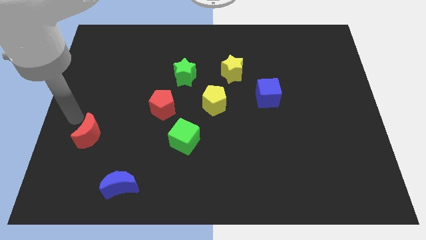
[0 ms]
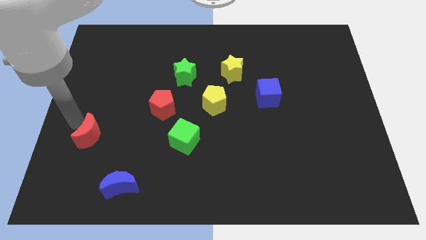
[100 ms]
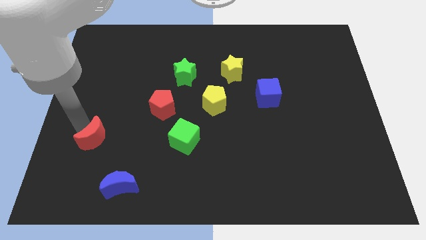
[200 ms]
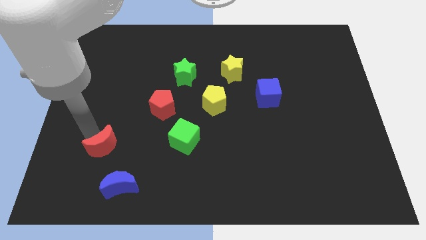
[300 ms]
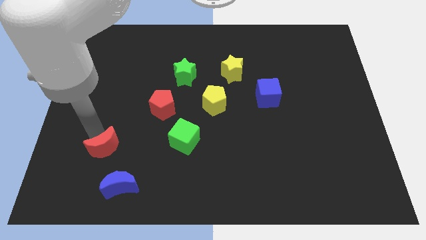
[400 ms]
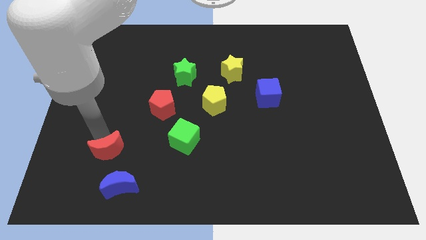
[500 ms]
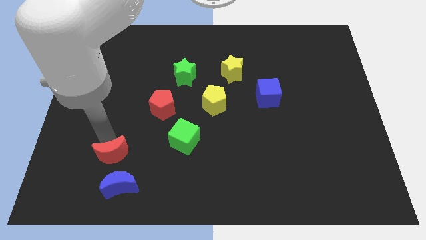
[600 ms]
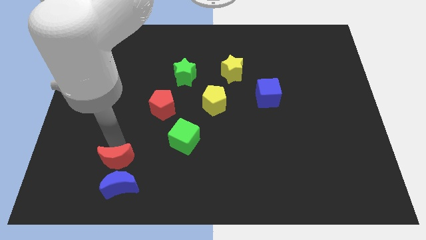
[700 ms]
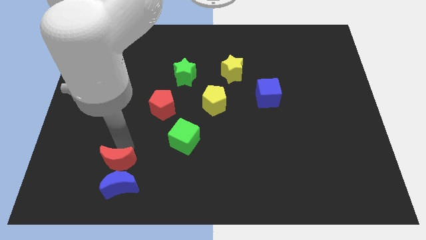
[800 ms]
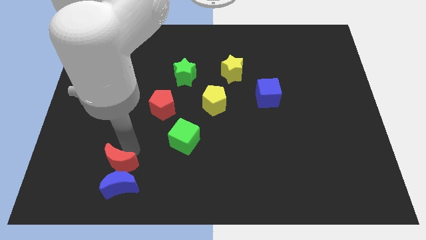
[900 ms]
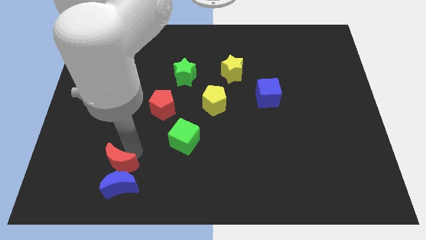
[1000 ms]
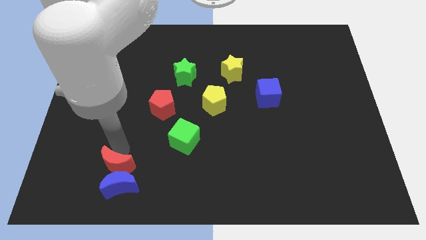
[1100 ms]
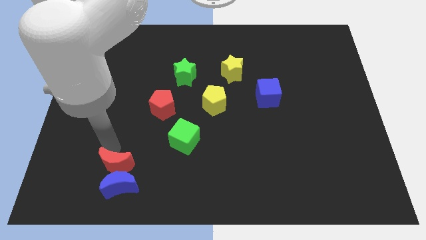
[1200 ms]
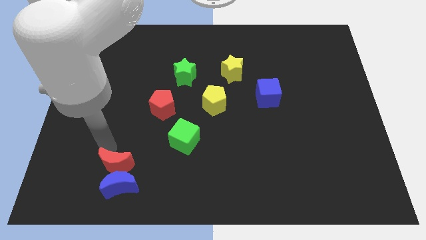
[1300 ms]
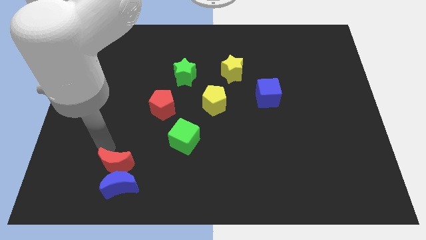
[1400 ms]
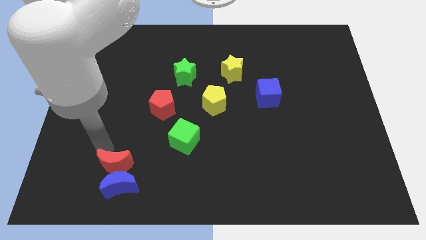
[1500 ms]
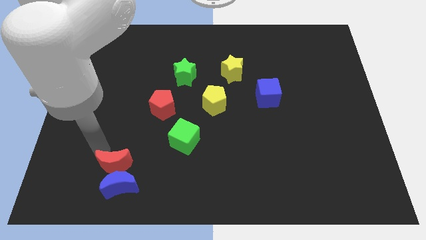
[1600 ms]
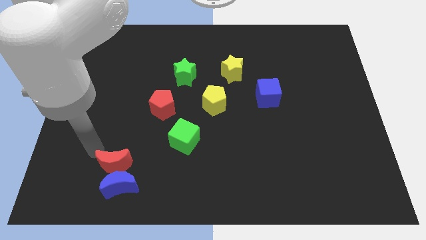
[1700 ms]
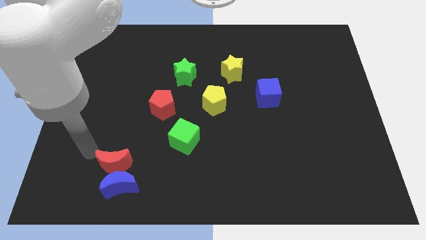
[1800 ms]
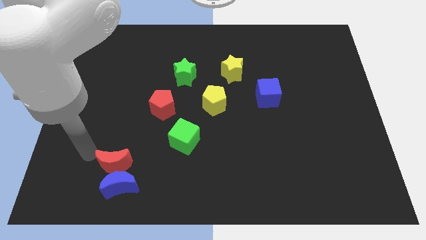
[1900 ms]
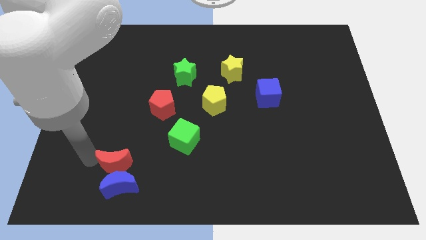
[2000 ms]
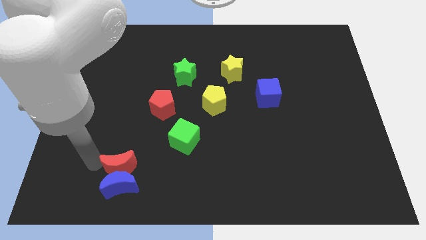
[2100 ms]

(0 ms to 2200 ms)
push the red moon above the blue crescent

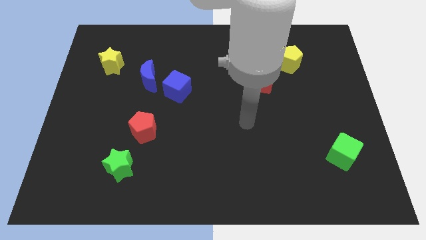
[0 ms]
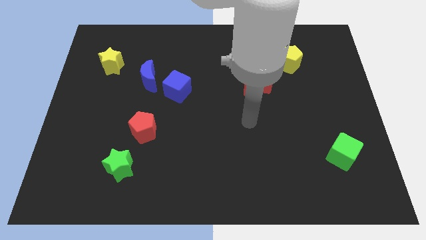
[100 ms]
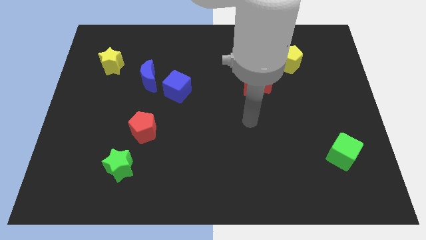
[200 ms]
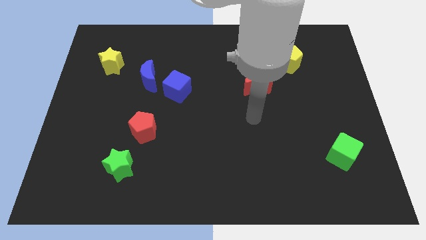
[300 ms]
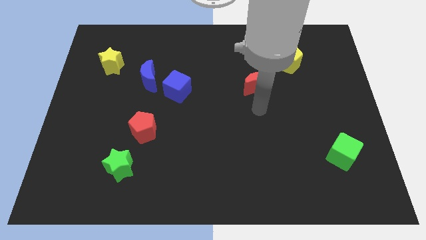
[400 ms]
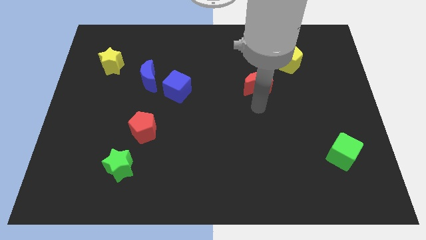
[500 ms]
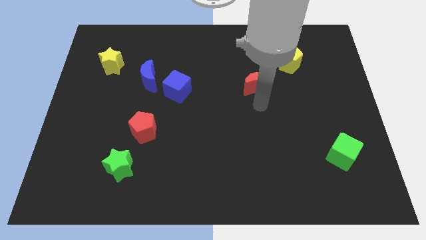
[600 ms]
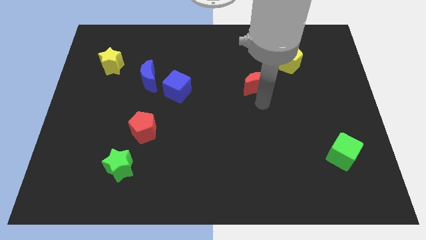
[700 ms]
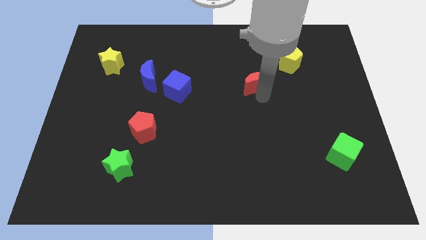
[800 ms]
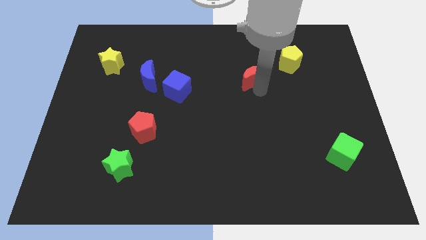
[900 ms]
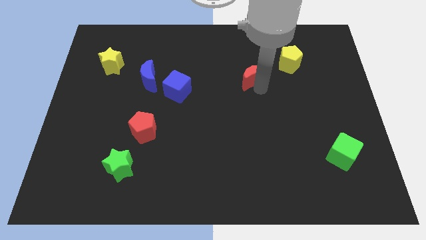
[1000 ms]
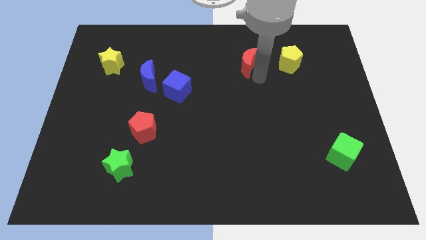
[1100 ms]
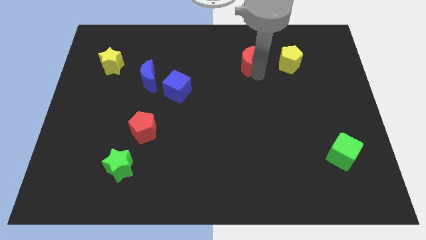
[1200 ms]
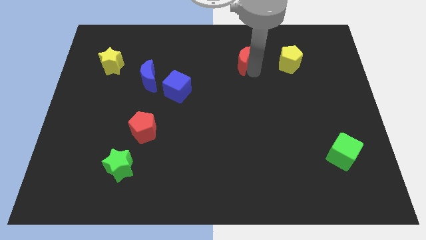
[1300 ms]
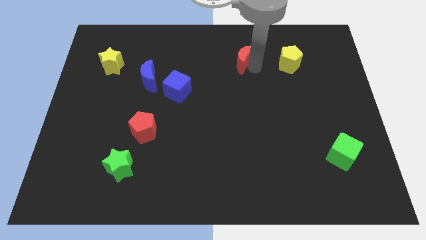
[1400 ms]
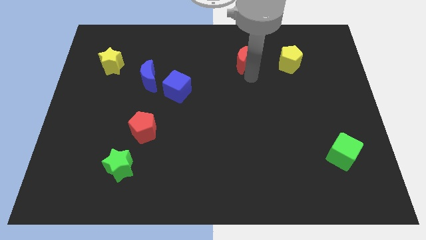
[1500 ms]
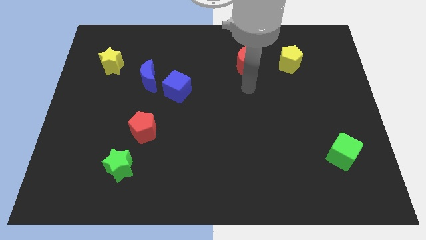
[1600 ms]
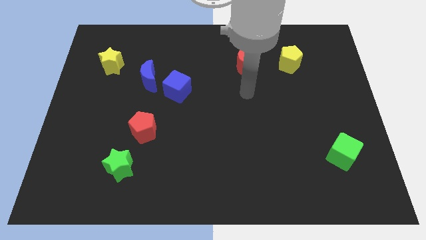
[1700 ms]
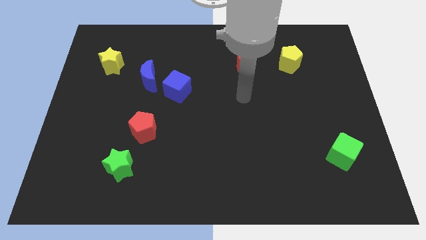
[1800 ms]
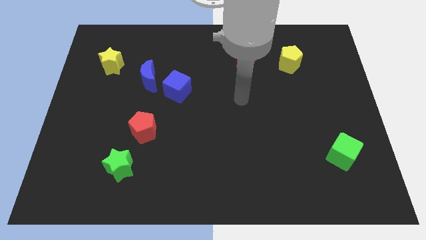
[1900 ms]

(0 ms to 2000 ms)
push the red crescent to the left side of the yellow pentagon

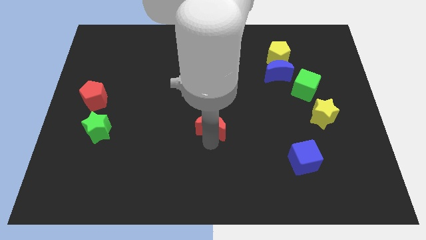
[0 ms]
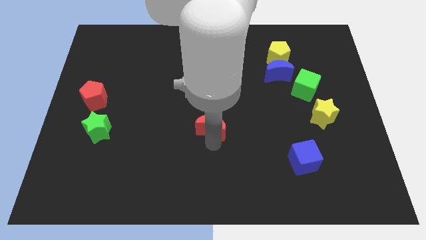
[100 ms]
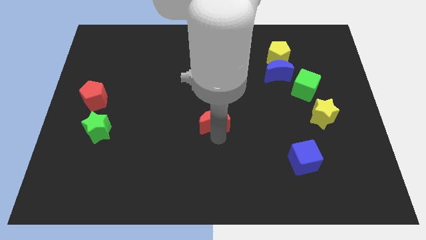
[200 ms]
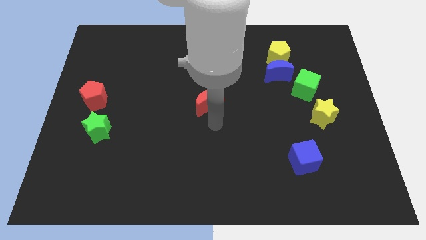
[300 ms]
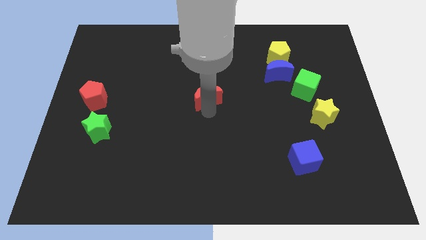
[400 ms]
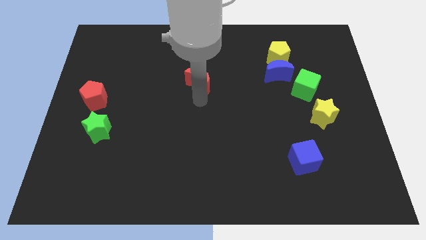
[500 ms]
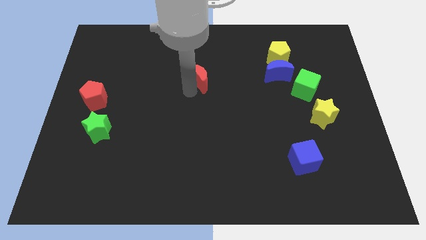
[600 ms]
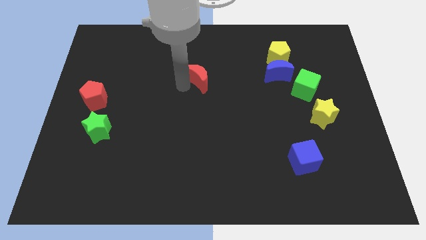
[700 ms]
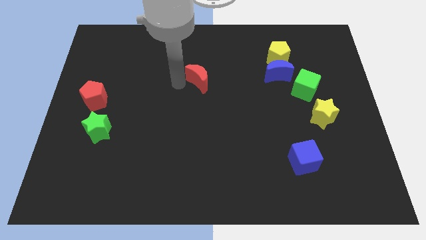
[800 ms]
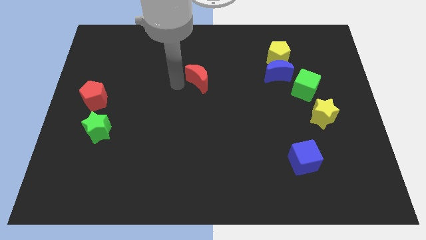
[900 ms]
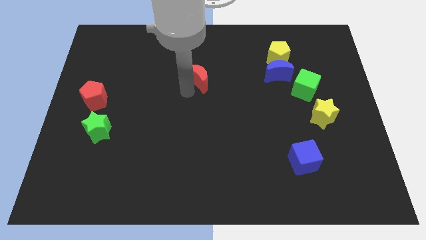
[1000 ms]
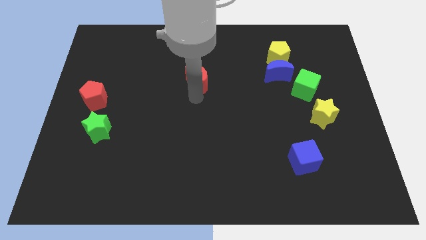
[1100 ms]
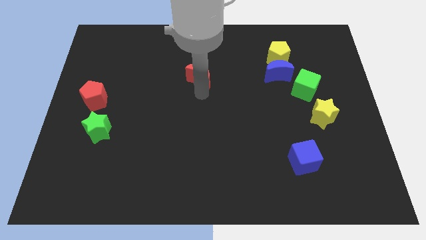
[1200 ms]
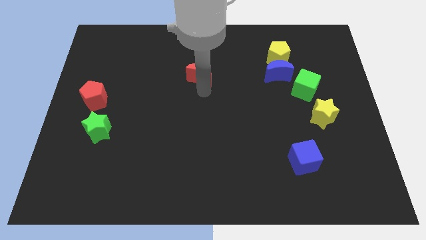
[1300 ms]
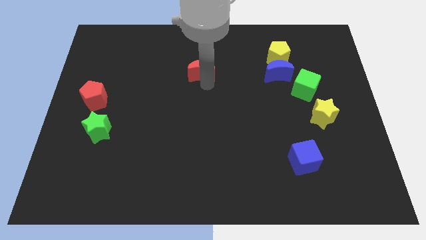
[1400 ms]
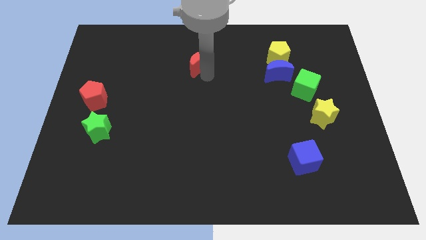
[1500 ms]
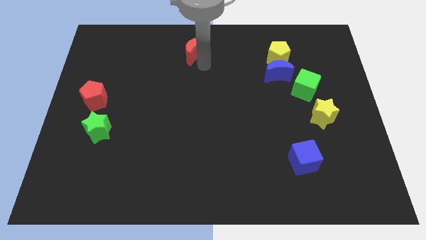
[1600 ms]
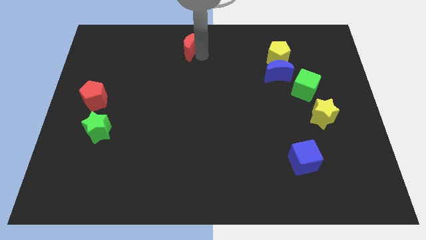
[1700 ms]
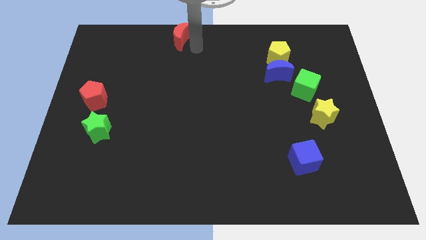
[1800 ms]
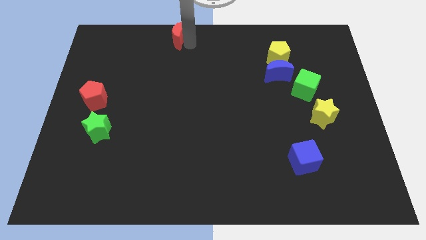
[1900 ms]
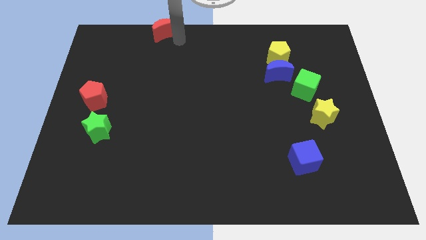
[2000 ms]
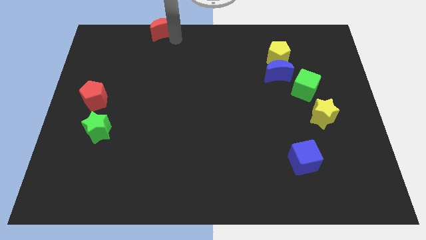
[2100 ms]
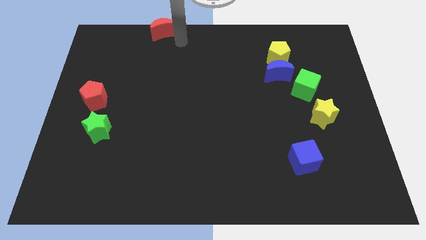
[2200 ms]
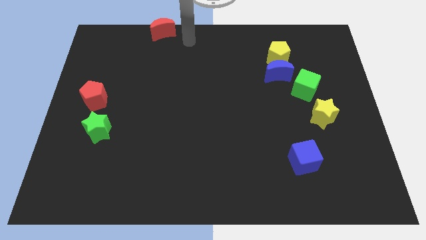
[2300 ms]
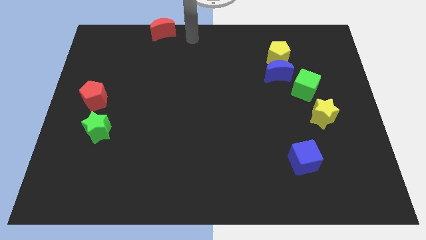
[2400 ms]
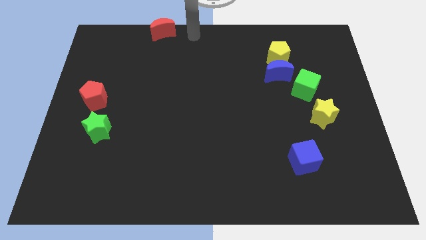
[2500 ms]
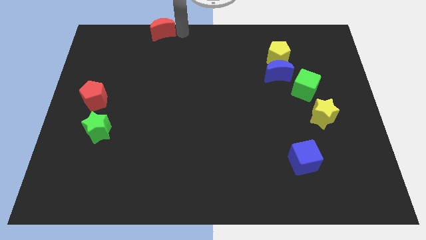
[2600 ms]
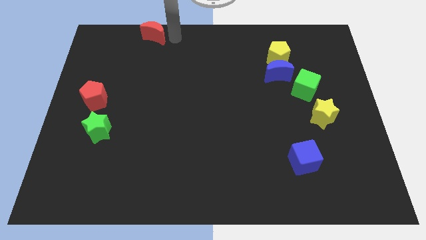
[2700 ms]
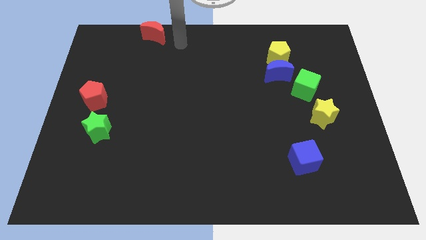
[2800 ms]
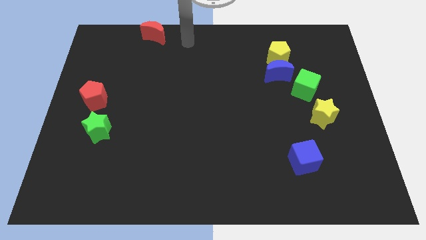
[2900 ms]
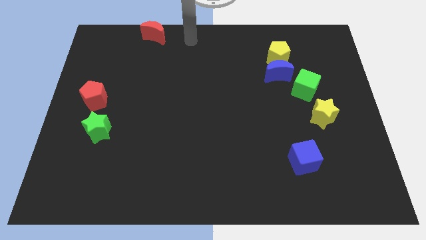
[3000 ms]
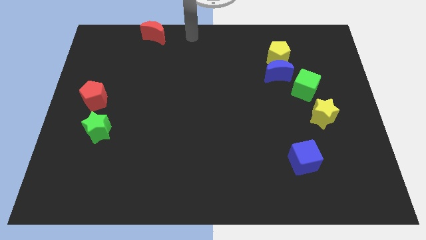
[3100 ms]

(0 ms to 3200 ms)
push the red moon towards the top left

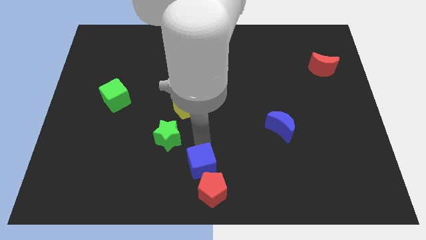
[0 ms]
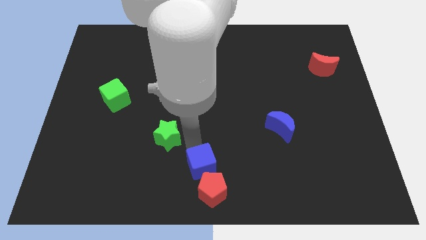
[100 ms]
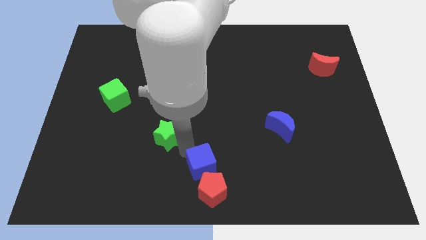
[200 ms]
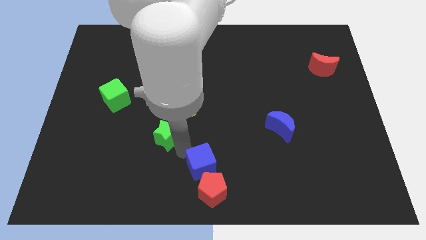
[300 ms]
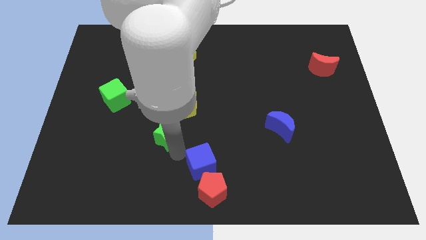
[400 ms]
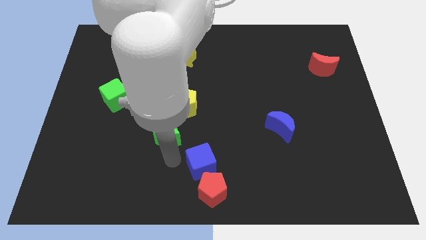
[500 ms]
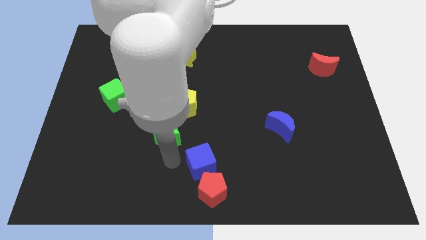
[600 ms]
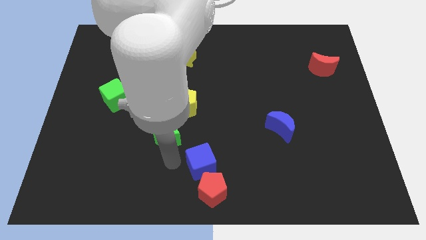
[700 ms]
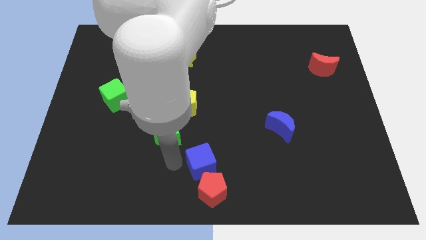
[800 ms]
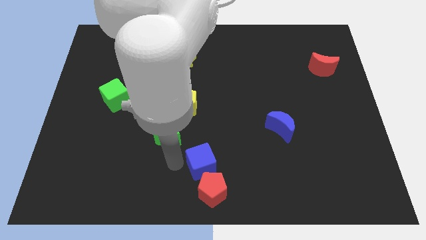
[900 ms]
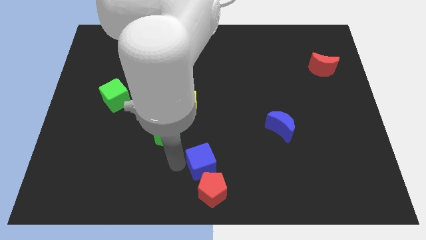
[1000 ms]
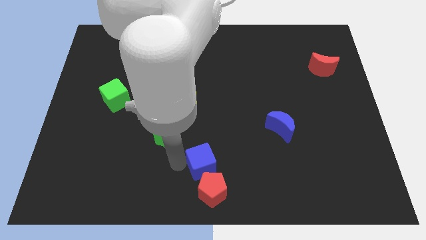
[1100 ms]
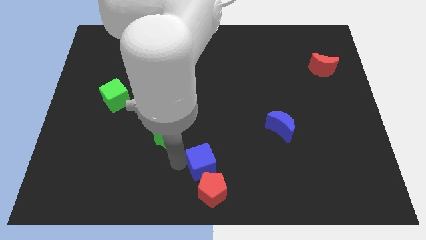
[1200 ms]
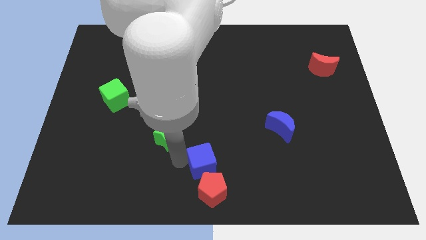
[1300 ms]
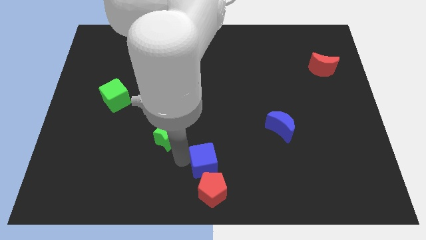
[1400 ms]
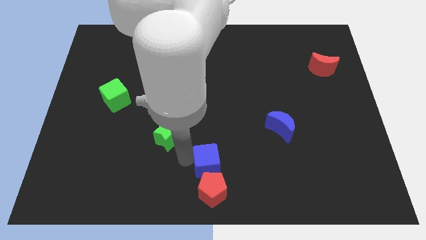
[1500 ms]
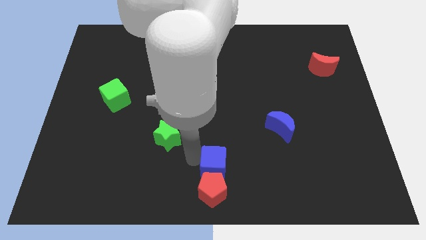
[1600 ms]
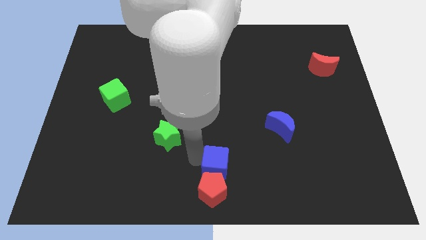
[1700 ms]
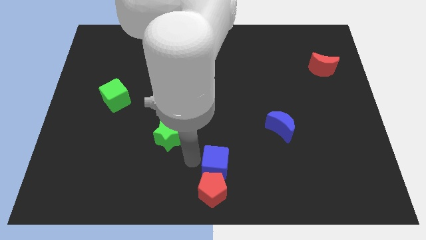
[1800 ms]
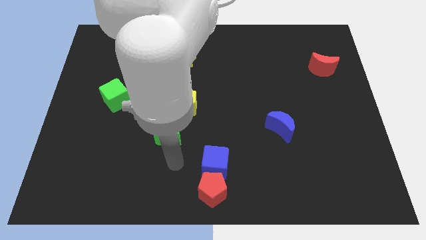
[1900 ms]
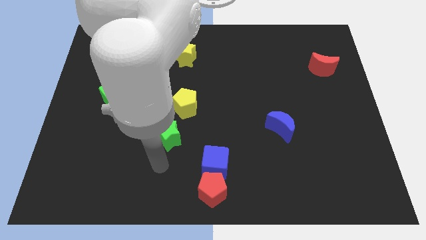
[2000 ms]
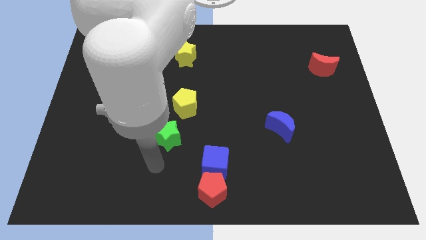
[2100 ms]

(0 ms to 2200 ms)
slightly move the blue cube towards right
